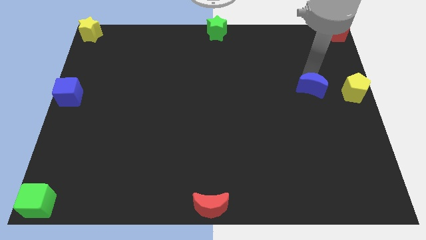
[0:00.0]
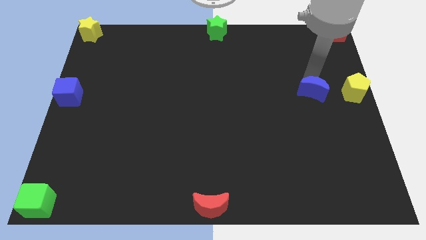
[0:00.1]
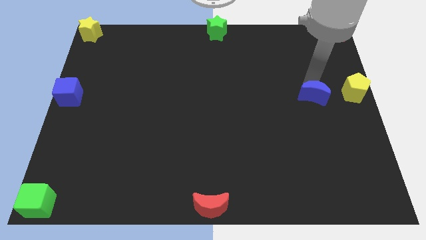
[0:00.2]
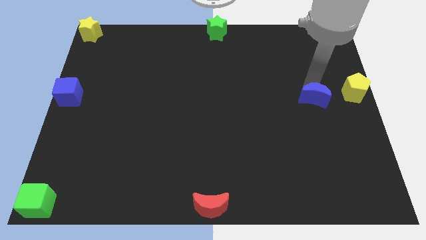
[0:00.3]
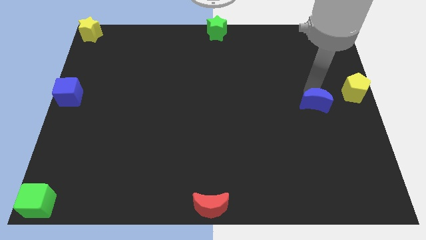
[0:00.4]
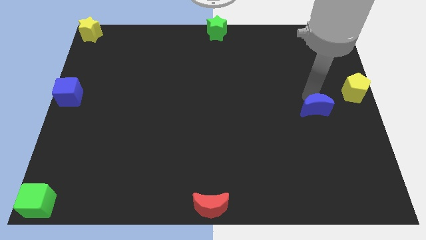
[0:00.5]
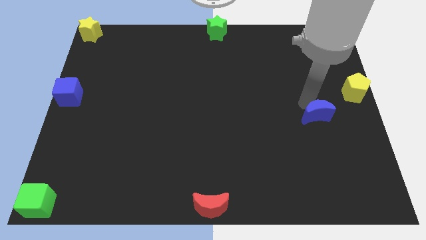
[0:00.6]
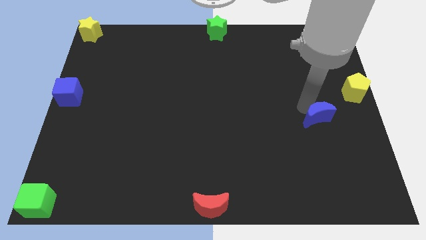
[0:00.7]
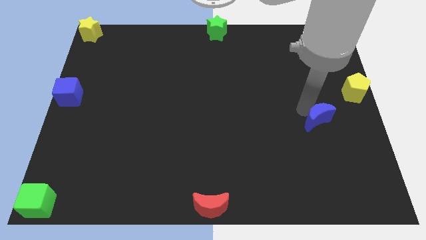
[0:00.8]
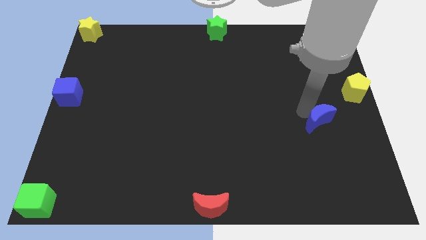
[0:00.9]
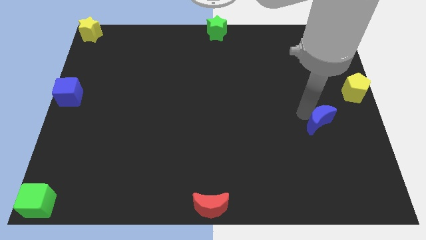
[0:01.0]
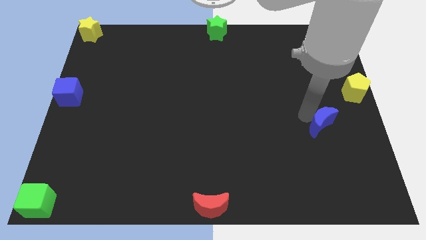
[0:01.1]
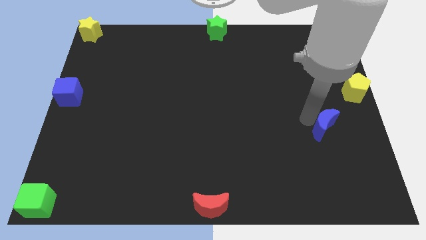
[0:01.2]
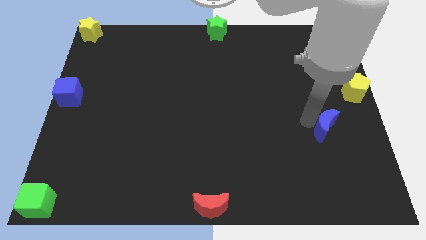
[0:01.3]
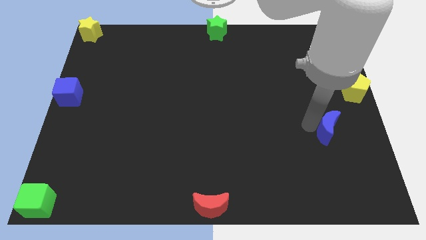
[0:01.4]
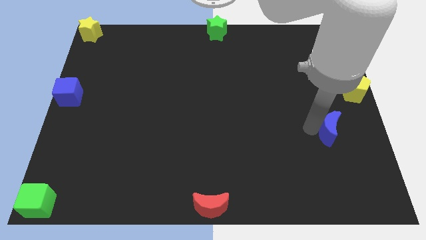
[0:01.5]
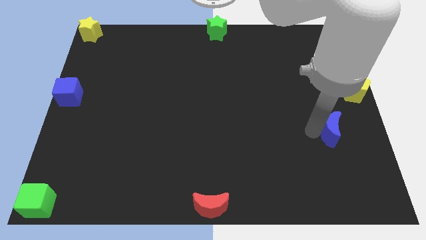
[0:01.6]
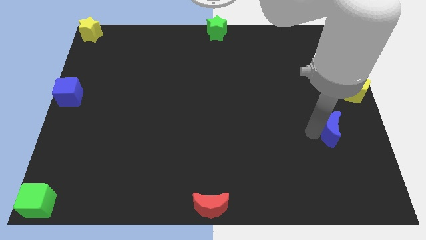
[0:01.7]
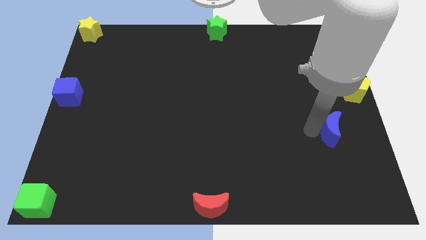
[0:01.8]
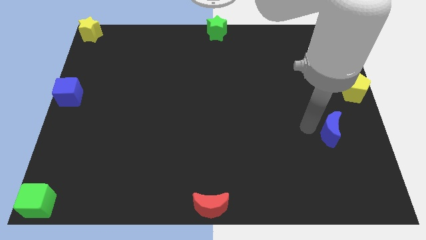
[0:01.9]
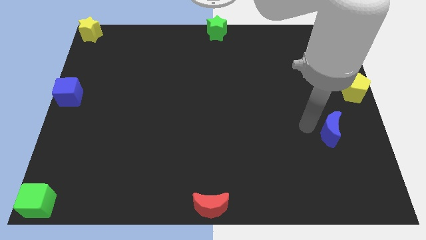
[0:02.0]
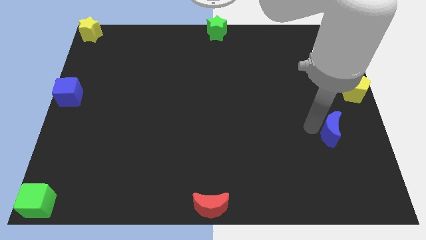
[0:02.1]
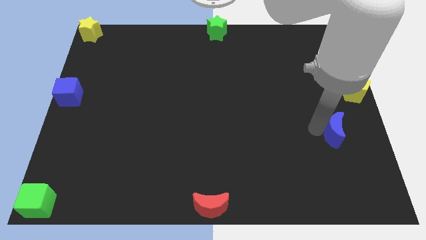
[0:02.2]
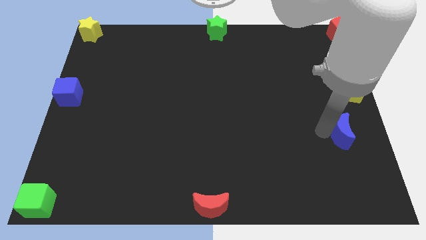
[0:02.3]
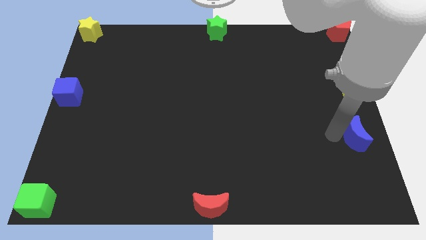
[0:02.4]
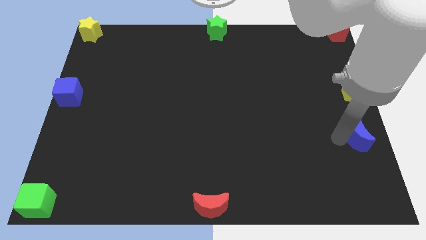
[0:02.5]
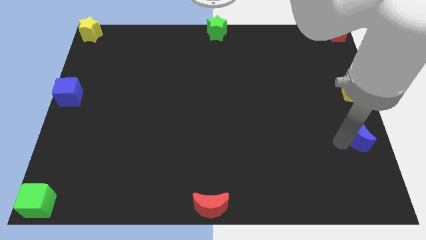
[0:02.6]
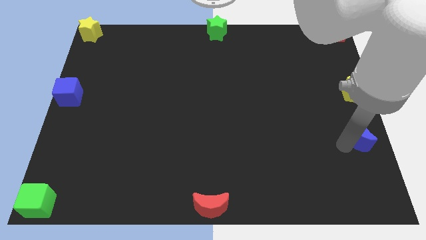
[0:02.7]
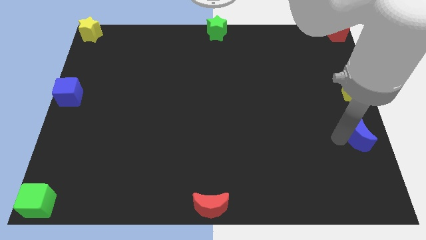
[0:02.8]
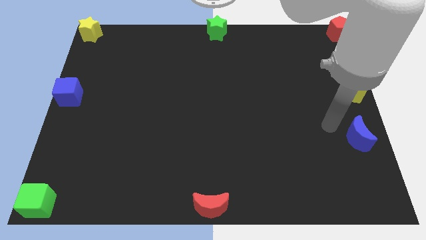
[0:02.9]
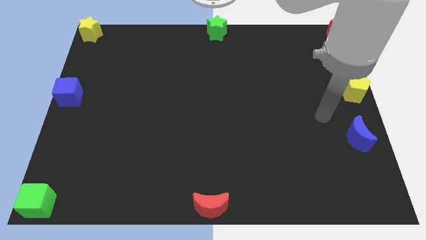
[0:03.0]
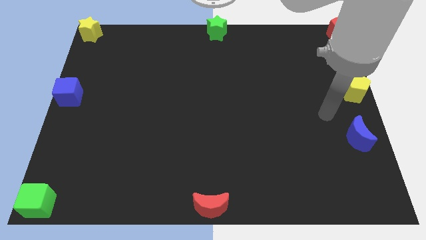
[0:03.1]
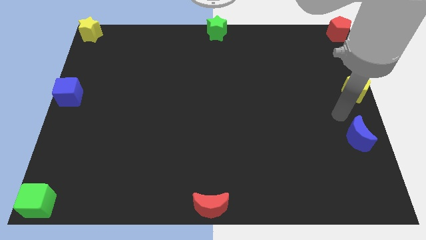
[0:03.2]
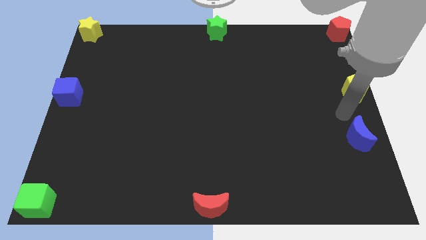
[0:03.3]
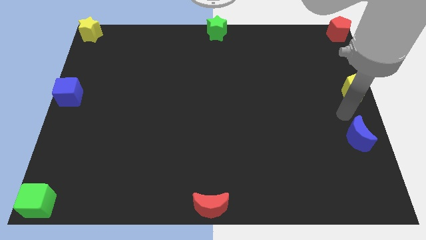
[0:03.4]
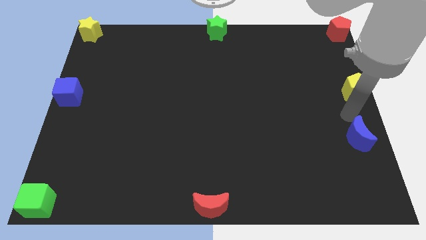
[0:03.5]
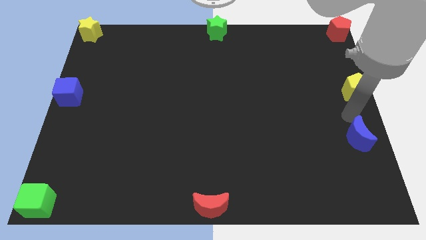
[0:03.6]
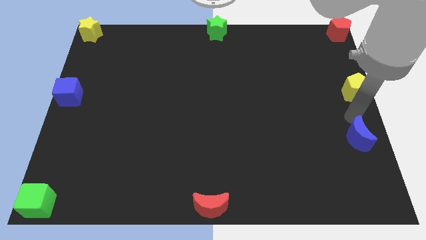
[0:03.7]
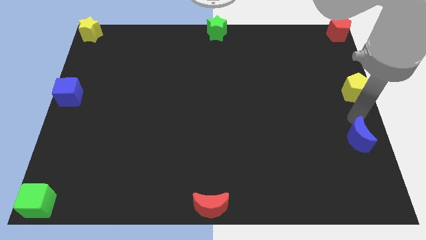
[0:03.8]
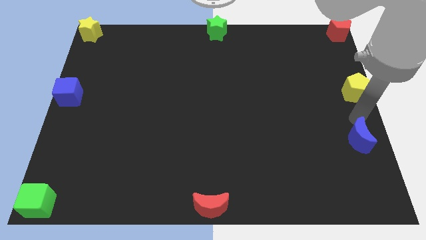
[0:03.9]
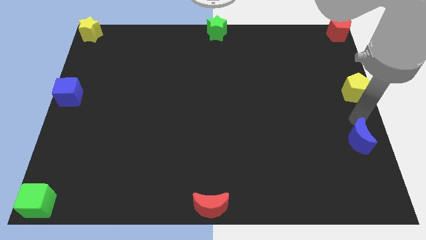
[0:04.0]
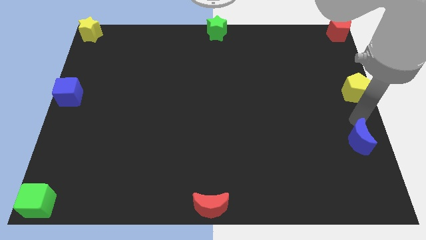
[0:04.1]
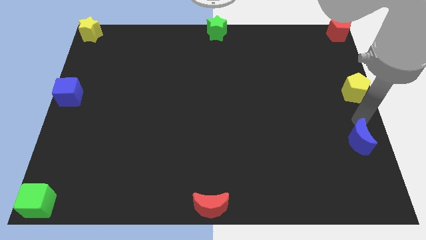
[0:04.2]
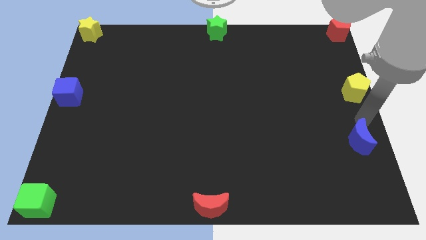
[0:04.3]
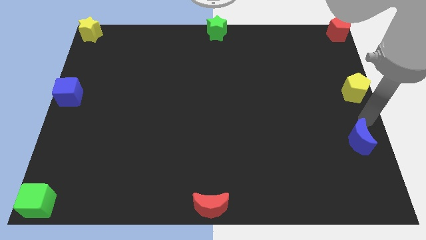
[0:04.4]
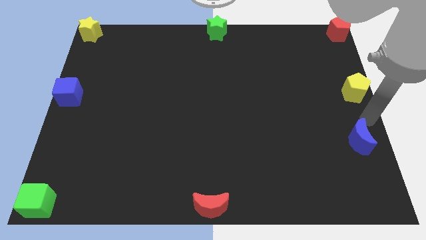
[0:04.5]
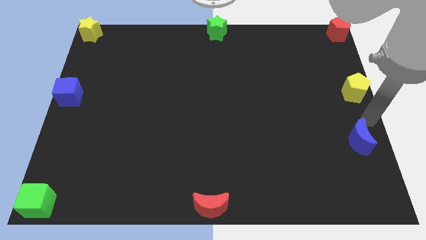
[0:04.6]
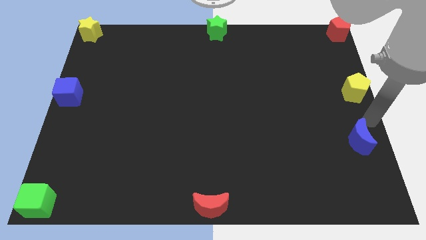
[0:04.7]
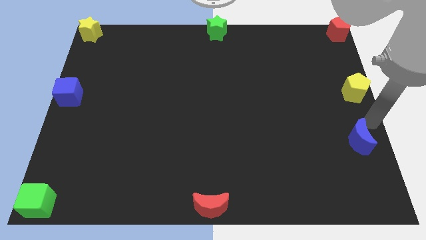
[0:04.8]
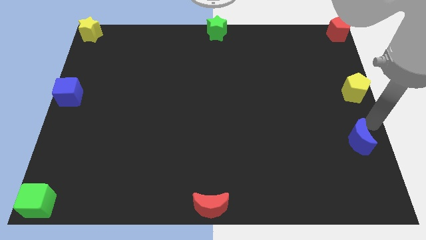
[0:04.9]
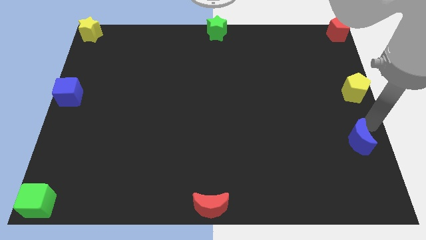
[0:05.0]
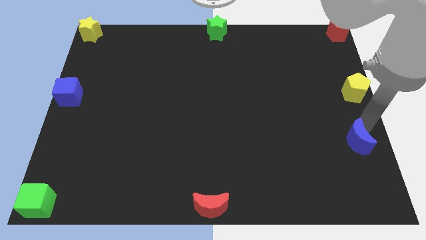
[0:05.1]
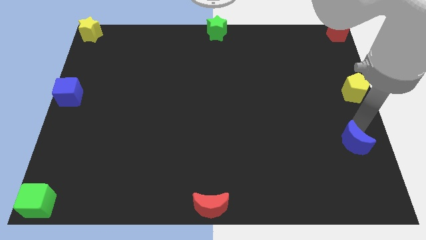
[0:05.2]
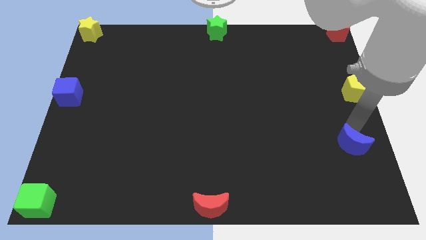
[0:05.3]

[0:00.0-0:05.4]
slightly push the blue moon to the bottom side

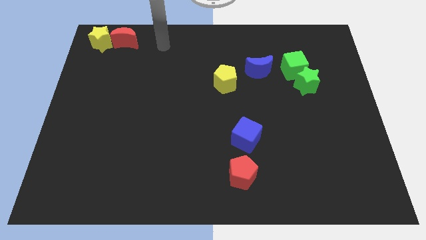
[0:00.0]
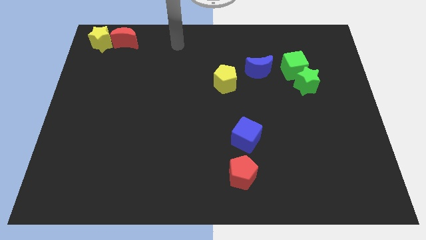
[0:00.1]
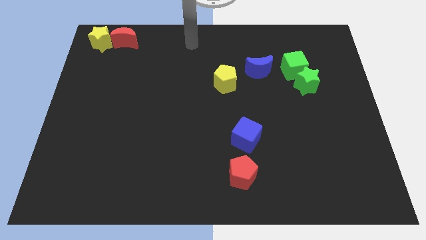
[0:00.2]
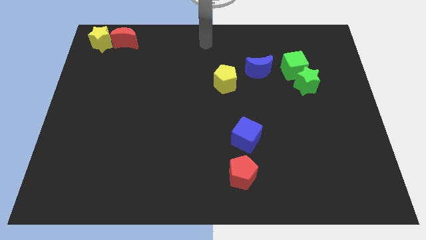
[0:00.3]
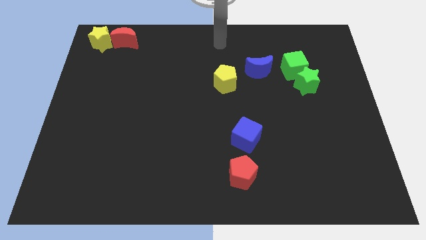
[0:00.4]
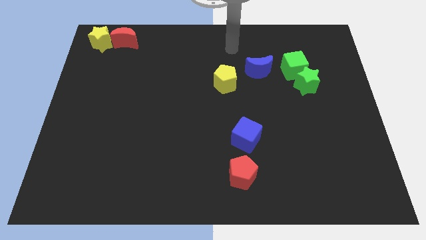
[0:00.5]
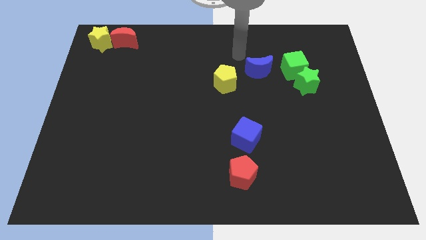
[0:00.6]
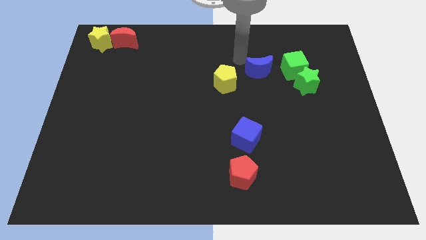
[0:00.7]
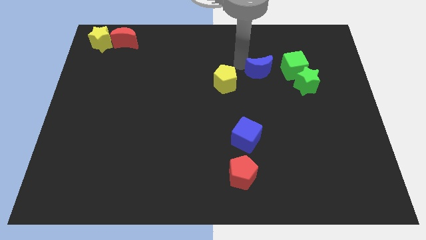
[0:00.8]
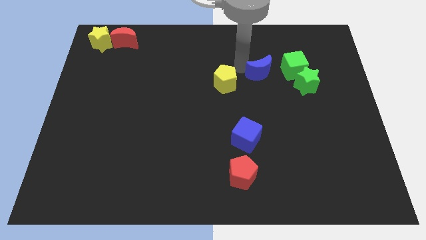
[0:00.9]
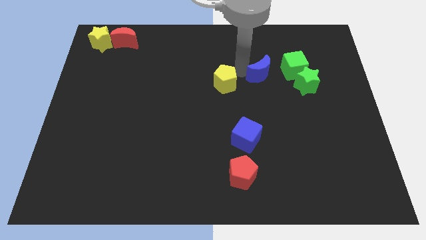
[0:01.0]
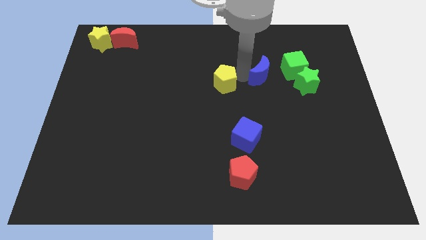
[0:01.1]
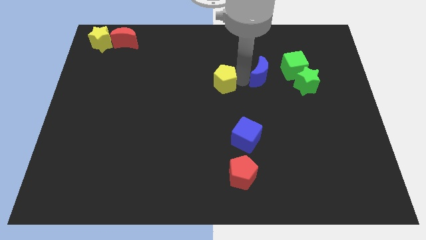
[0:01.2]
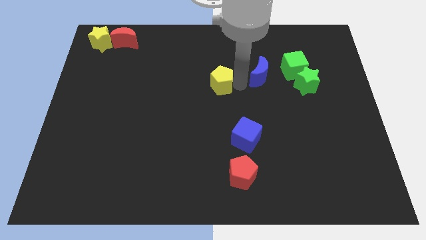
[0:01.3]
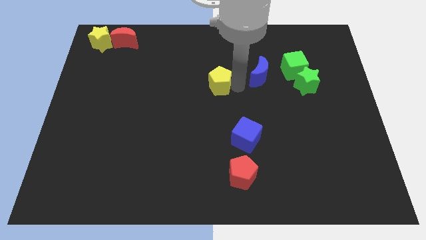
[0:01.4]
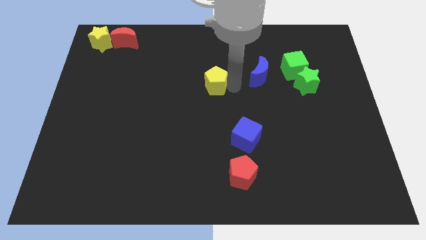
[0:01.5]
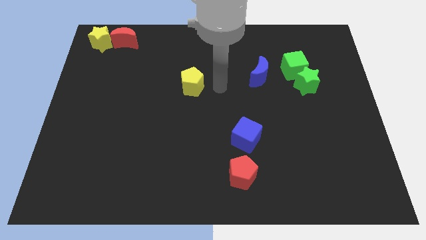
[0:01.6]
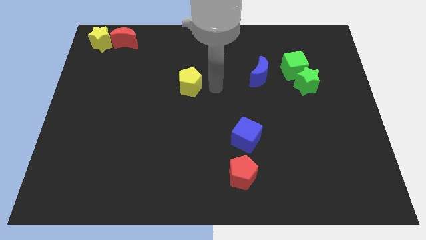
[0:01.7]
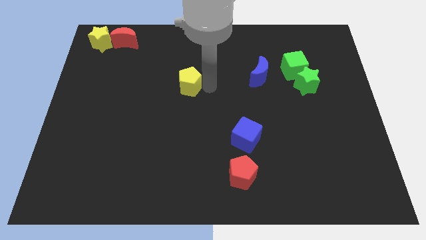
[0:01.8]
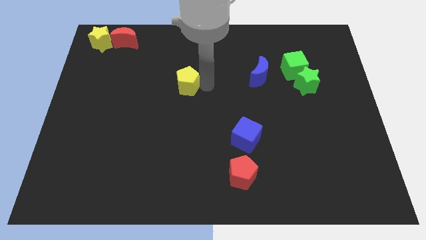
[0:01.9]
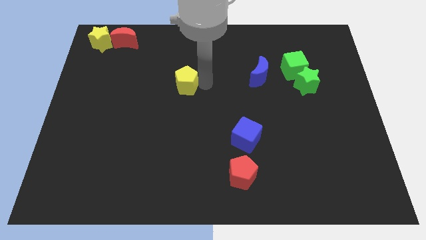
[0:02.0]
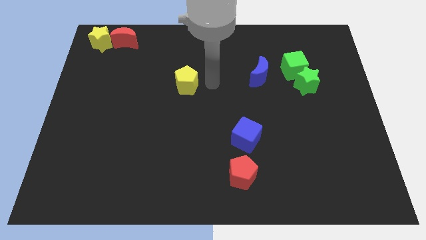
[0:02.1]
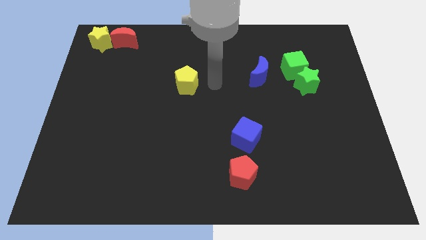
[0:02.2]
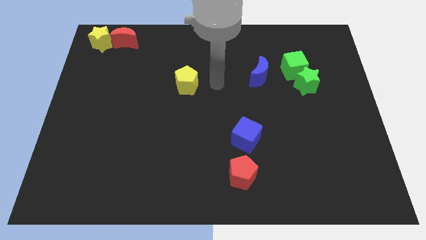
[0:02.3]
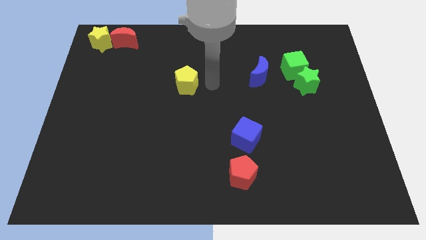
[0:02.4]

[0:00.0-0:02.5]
separate yellow pentagon away from blue moon

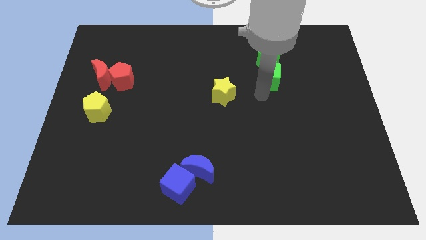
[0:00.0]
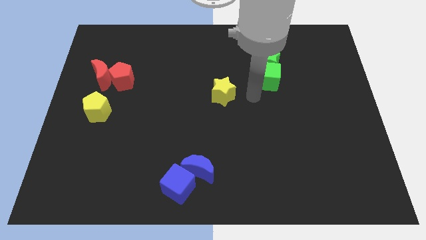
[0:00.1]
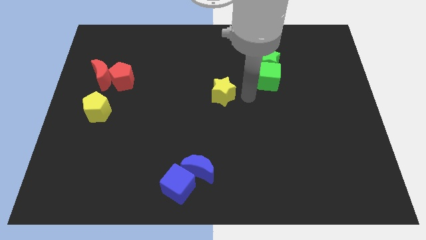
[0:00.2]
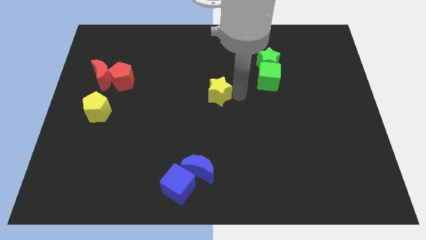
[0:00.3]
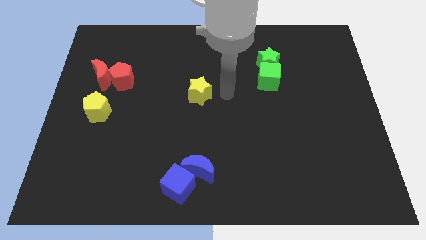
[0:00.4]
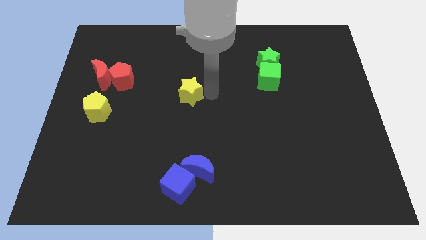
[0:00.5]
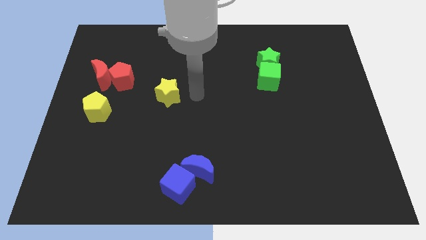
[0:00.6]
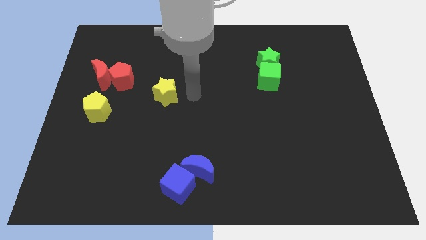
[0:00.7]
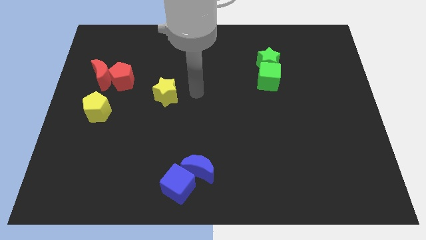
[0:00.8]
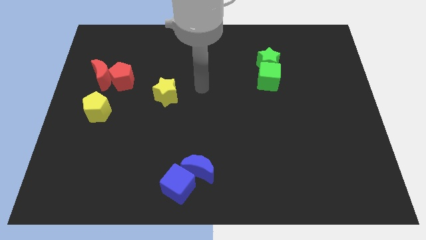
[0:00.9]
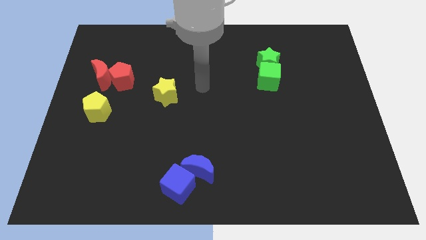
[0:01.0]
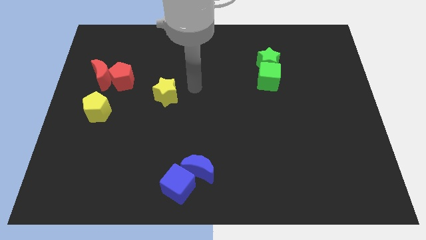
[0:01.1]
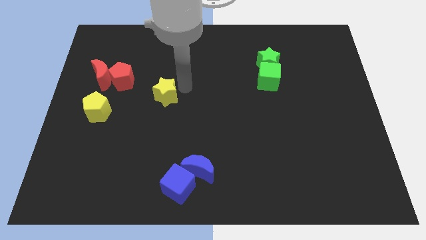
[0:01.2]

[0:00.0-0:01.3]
move your arm away from the green cube
